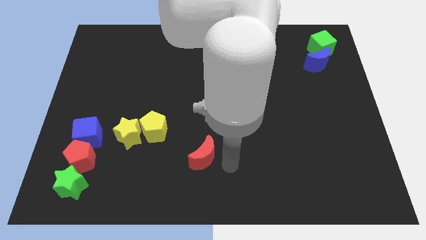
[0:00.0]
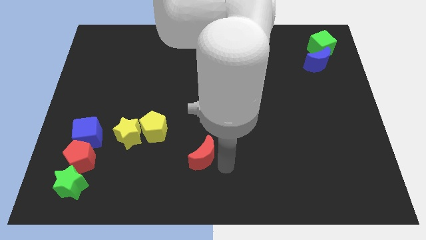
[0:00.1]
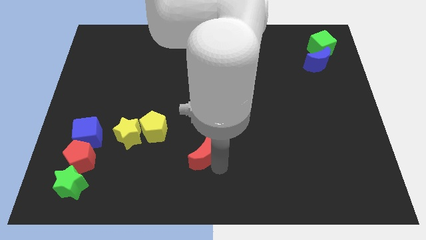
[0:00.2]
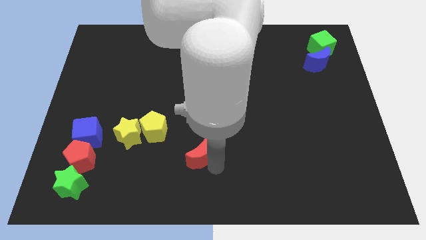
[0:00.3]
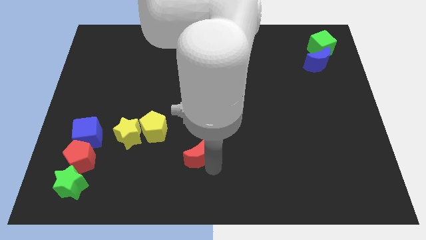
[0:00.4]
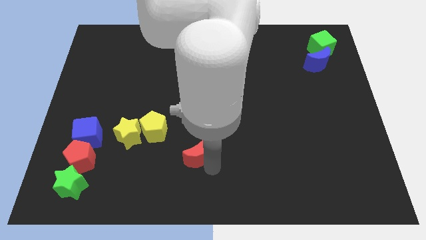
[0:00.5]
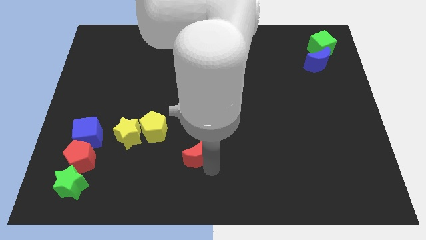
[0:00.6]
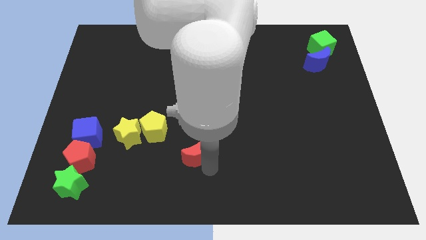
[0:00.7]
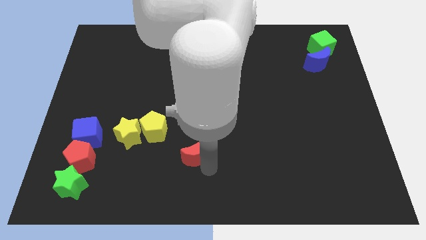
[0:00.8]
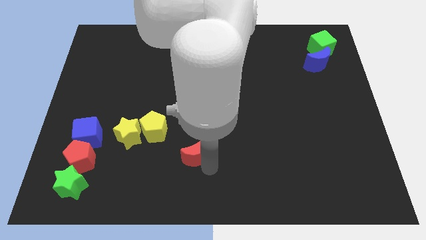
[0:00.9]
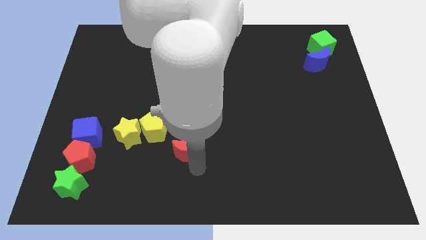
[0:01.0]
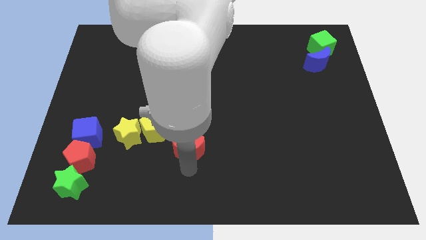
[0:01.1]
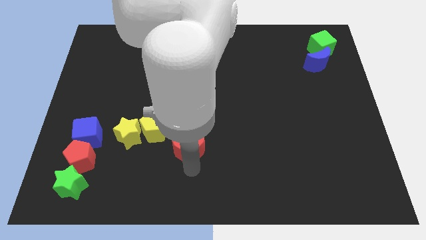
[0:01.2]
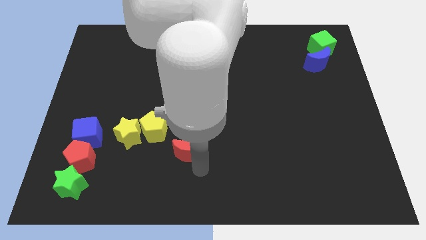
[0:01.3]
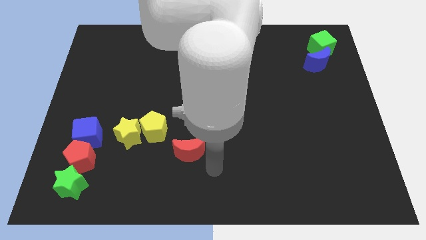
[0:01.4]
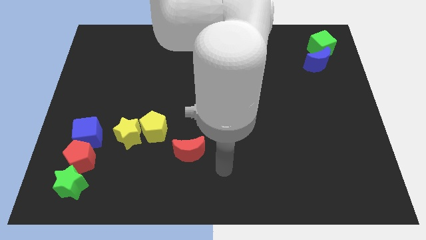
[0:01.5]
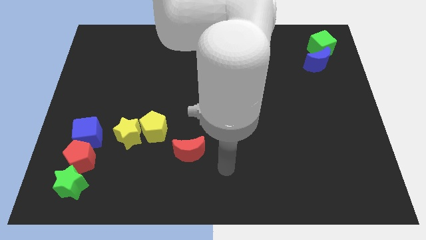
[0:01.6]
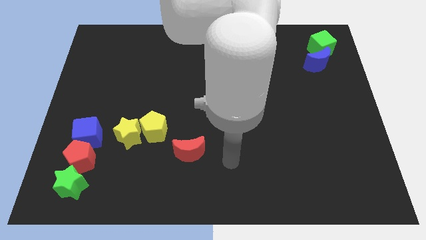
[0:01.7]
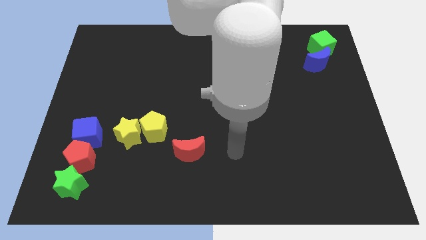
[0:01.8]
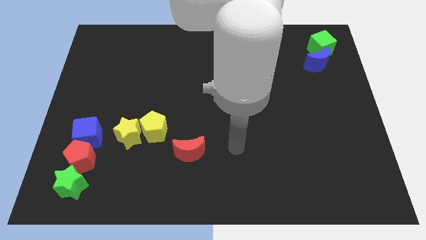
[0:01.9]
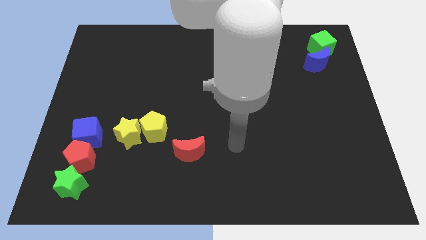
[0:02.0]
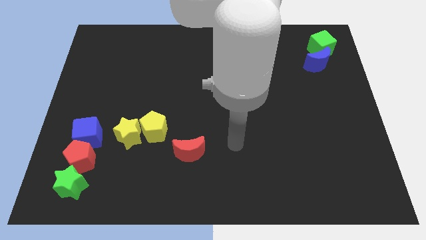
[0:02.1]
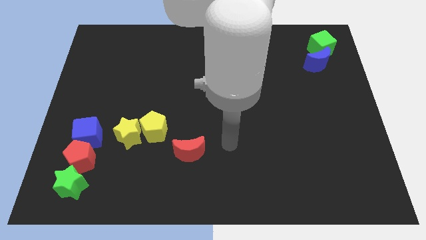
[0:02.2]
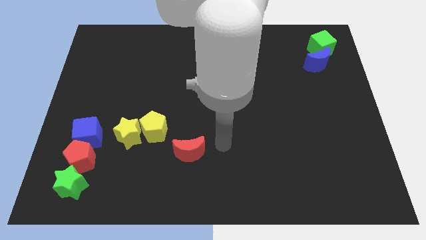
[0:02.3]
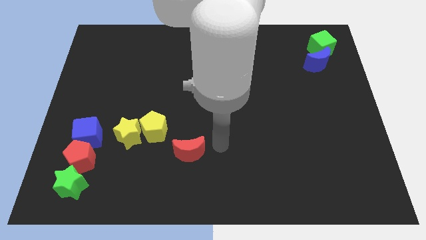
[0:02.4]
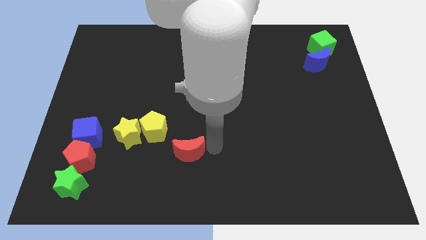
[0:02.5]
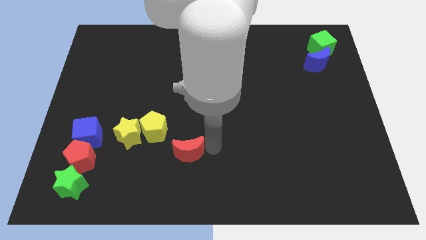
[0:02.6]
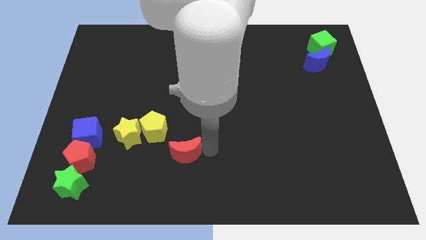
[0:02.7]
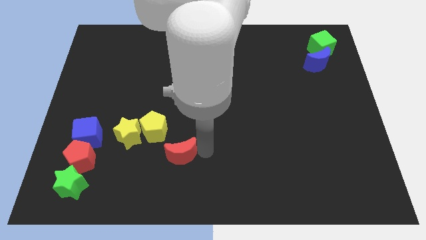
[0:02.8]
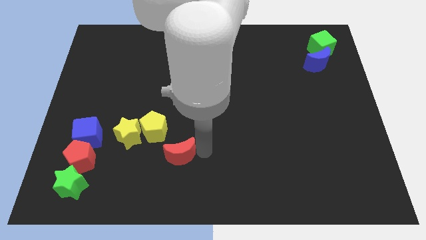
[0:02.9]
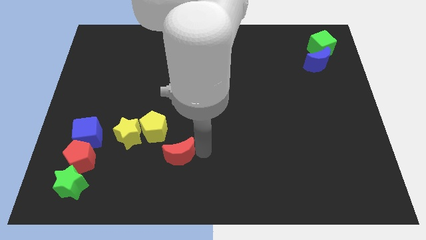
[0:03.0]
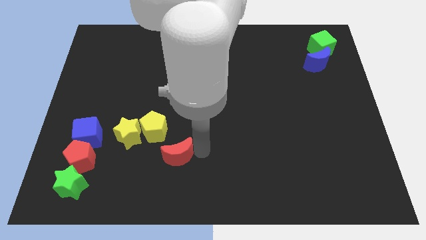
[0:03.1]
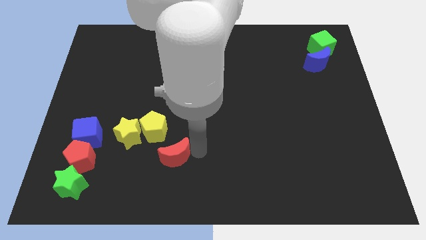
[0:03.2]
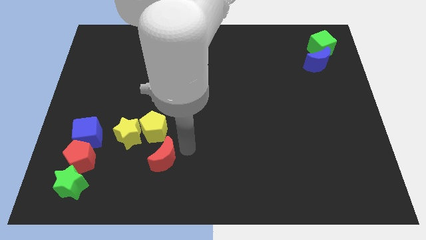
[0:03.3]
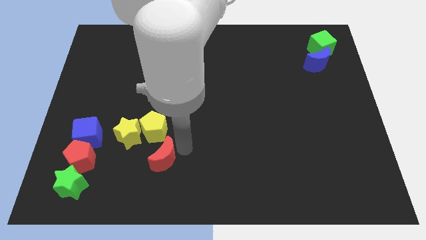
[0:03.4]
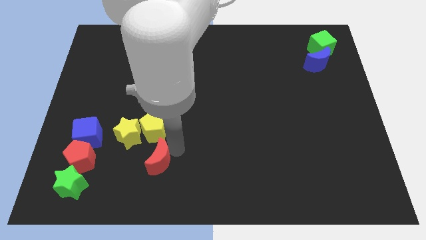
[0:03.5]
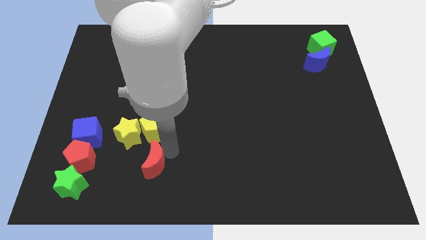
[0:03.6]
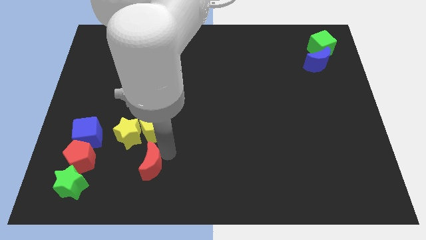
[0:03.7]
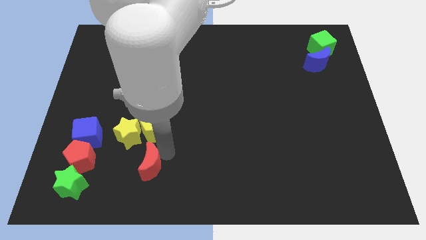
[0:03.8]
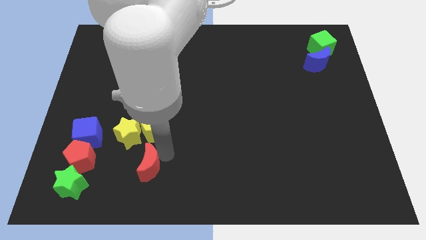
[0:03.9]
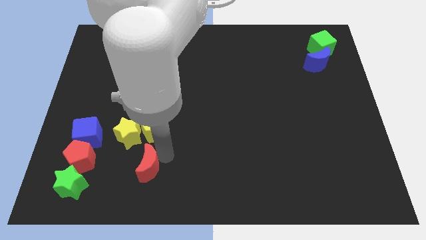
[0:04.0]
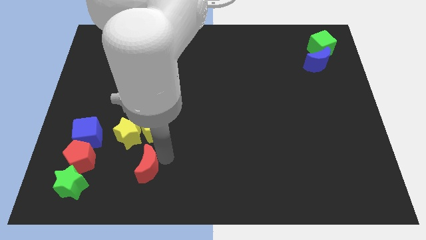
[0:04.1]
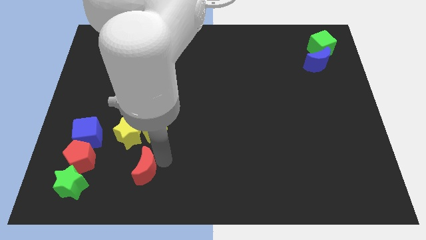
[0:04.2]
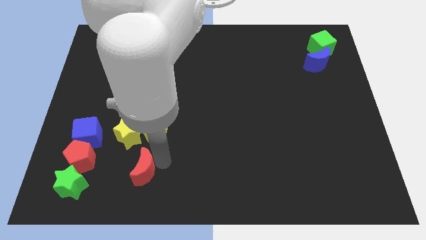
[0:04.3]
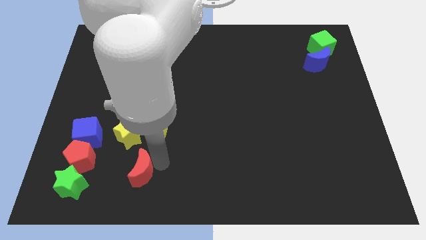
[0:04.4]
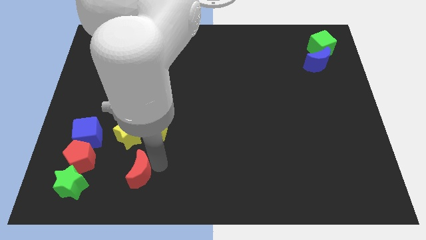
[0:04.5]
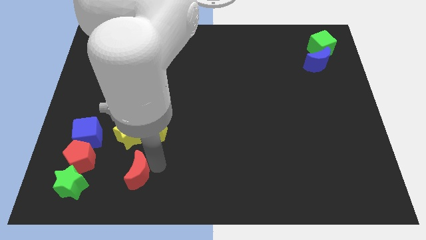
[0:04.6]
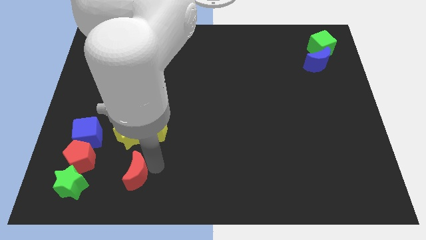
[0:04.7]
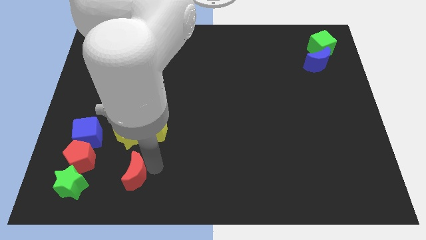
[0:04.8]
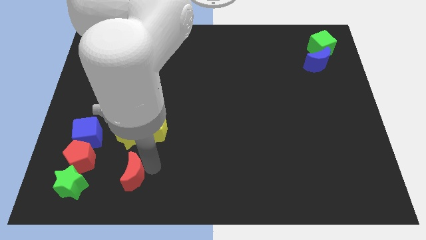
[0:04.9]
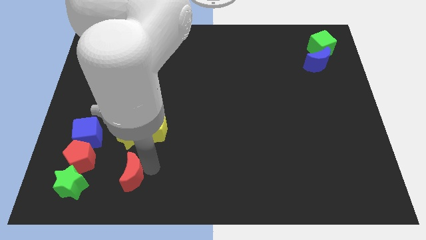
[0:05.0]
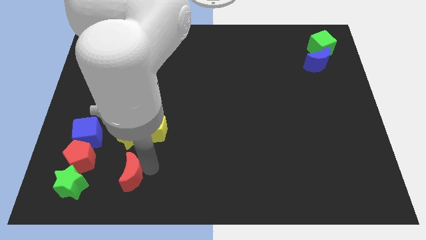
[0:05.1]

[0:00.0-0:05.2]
push the red moon to the bottom of the yellow star

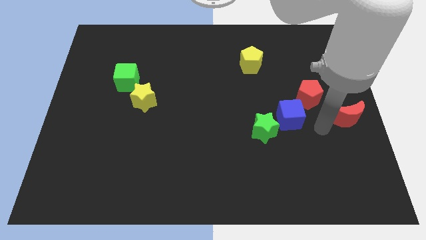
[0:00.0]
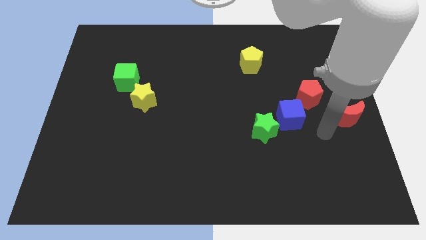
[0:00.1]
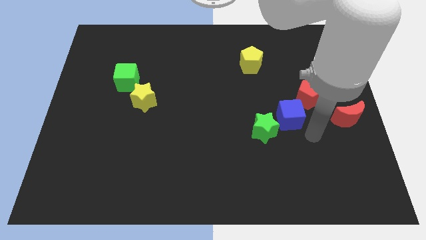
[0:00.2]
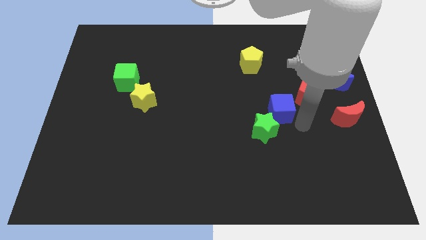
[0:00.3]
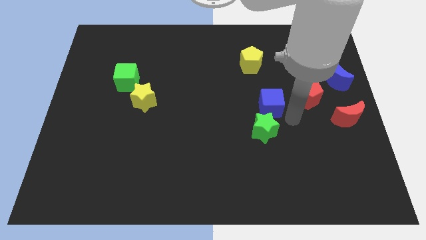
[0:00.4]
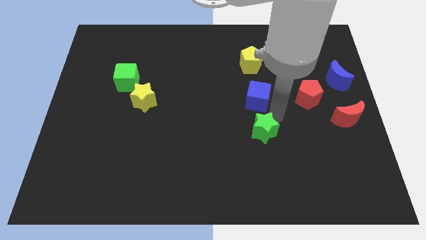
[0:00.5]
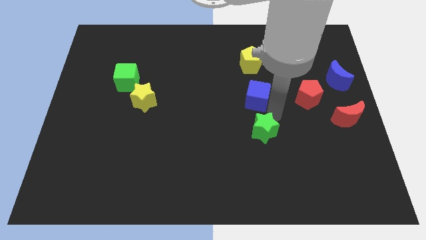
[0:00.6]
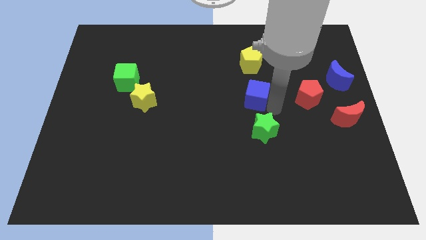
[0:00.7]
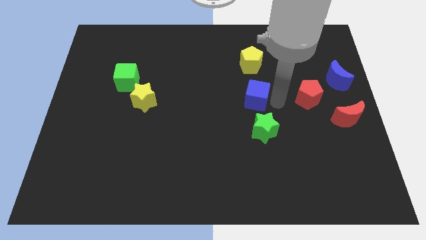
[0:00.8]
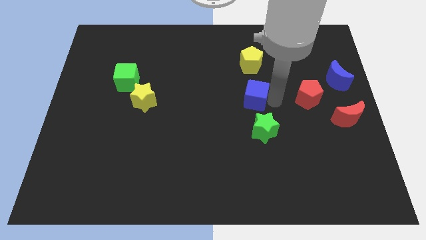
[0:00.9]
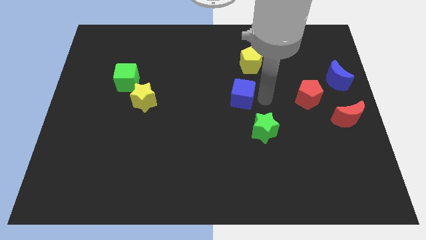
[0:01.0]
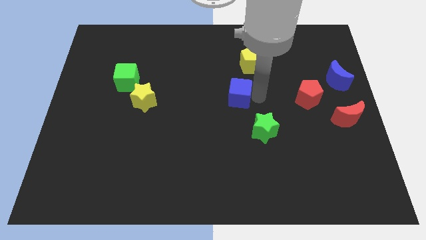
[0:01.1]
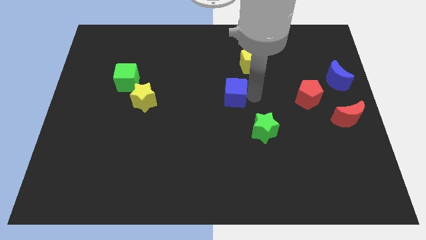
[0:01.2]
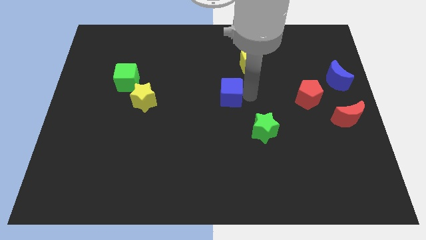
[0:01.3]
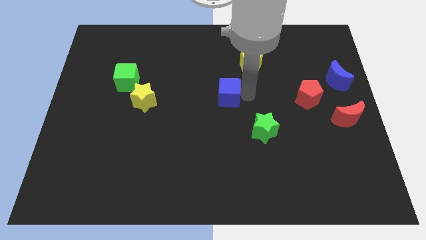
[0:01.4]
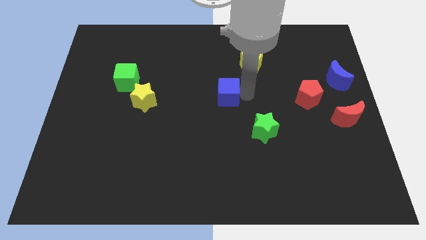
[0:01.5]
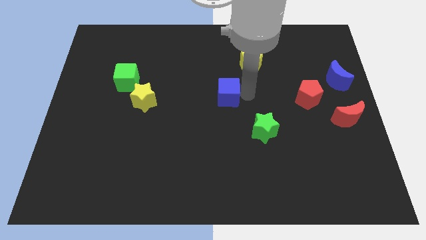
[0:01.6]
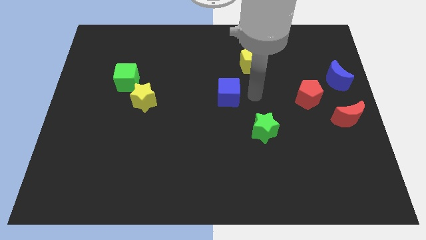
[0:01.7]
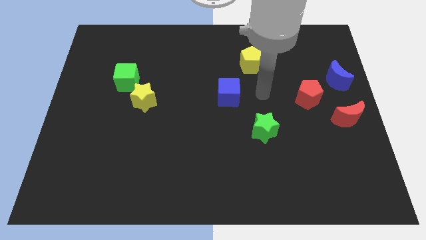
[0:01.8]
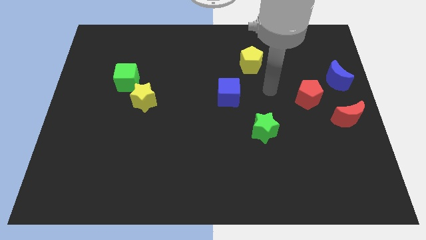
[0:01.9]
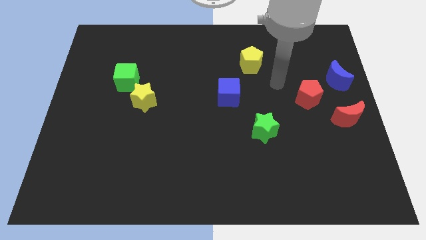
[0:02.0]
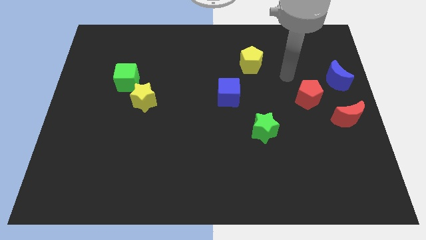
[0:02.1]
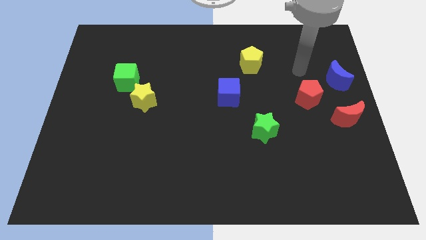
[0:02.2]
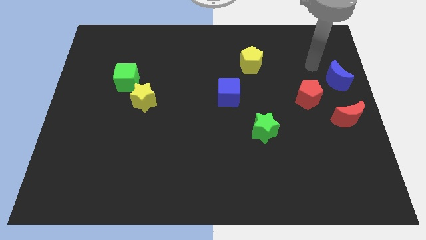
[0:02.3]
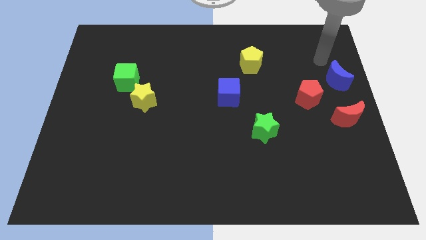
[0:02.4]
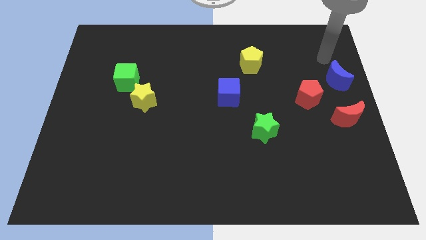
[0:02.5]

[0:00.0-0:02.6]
push the blue cube towards the center of the board

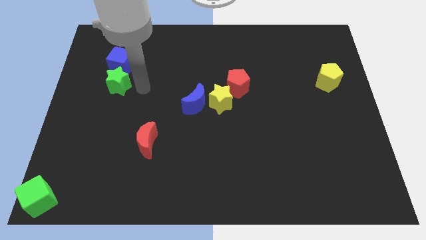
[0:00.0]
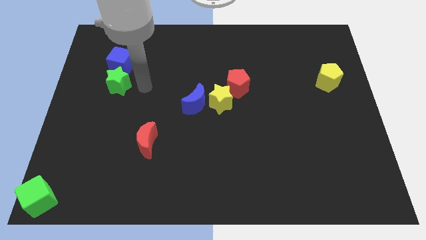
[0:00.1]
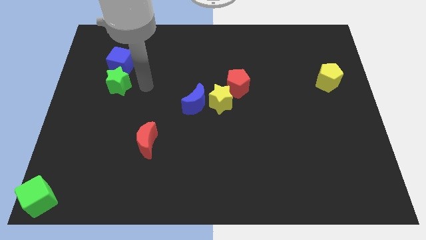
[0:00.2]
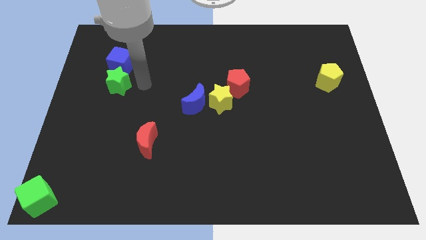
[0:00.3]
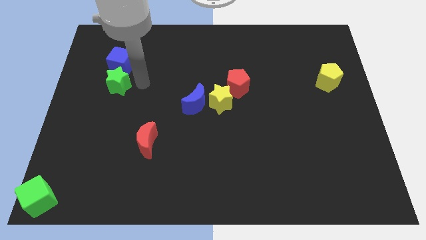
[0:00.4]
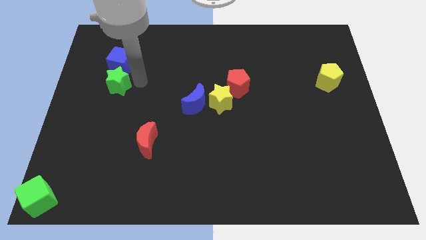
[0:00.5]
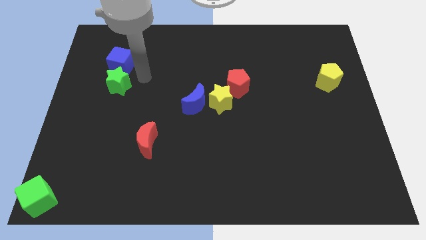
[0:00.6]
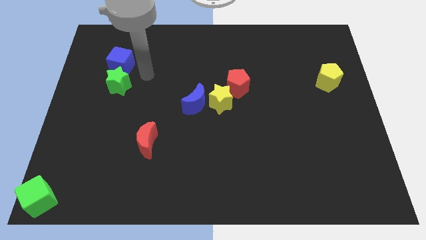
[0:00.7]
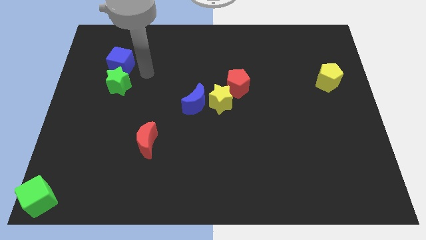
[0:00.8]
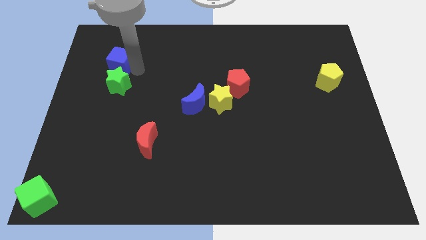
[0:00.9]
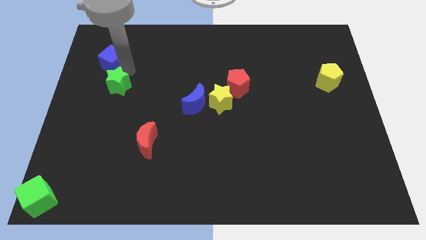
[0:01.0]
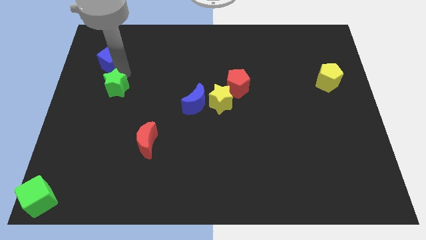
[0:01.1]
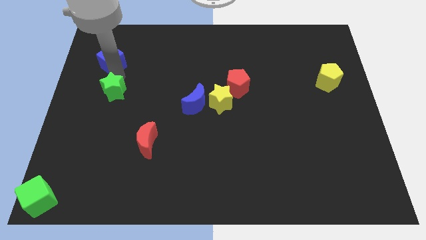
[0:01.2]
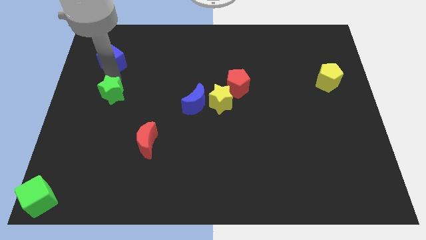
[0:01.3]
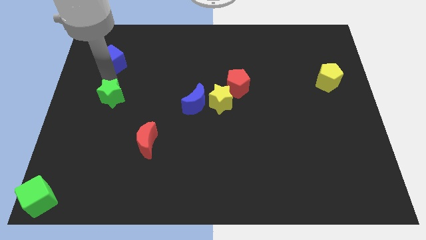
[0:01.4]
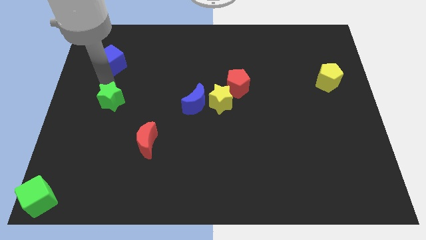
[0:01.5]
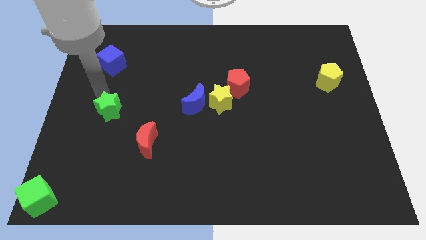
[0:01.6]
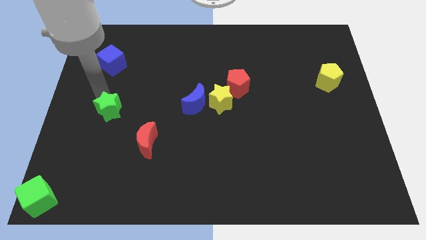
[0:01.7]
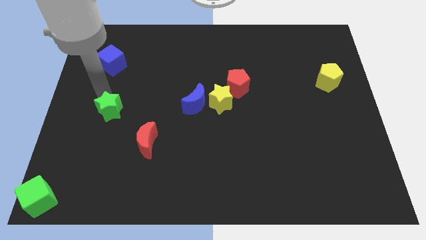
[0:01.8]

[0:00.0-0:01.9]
separate green star from blue cube
